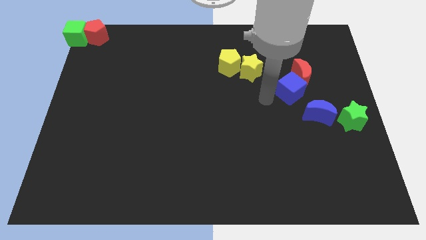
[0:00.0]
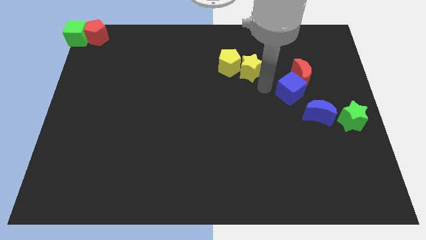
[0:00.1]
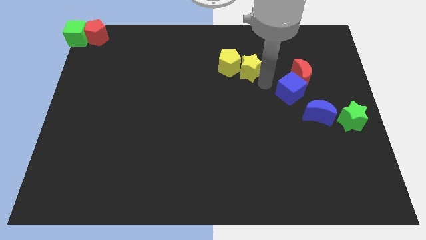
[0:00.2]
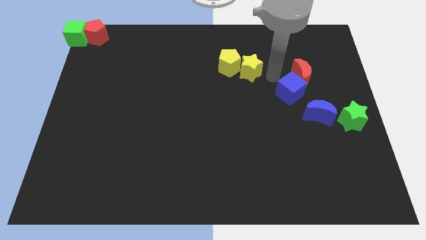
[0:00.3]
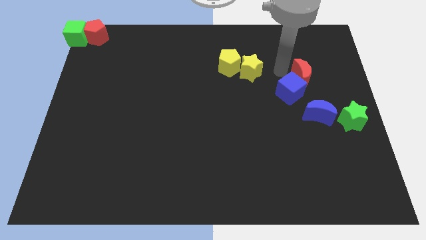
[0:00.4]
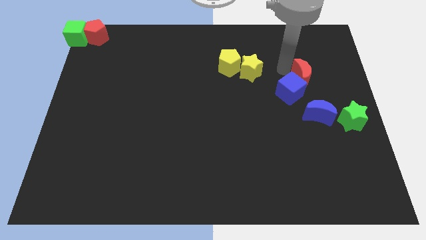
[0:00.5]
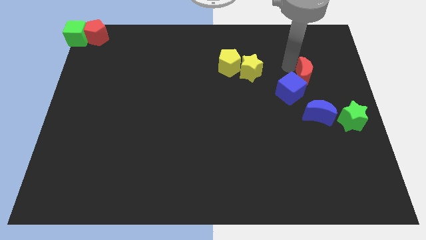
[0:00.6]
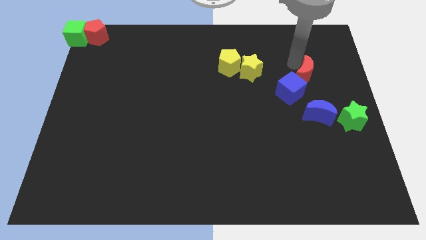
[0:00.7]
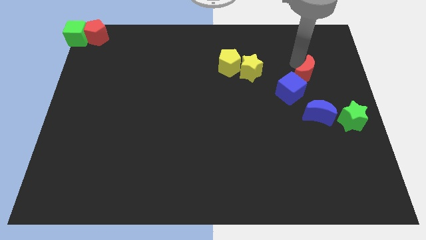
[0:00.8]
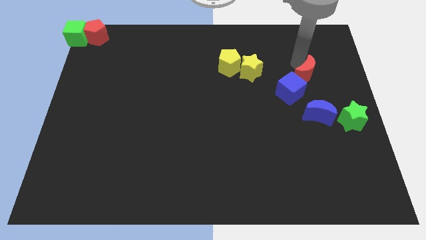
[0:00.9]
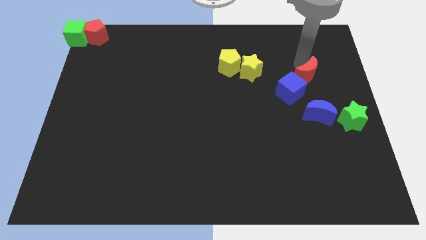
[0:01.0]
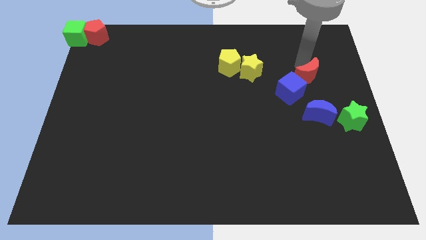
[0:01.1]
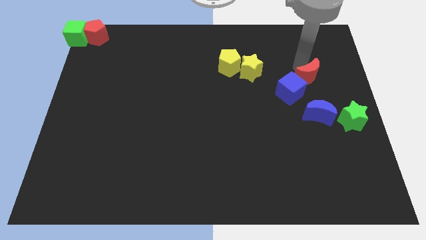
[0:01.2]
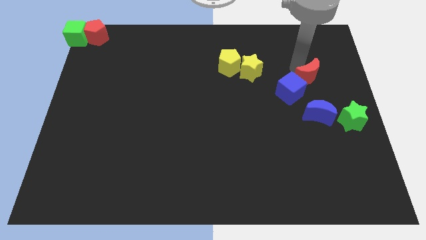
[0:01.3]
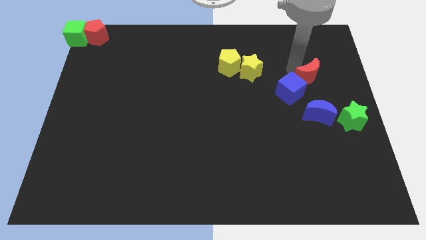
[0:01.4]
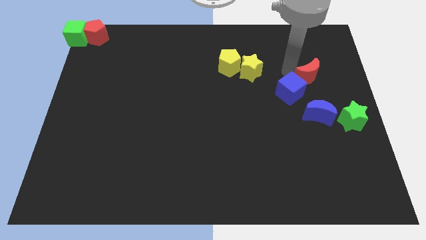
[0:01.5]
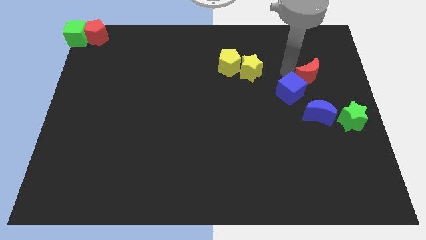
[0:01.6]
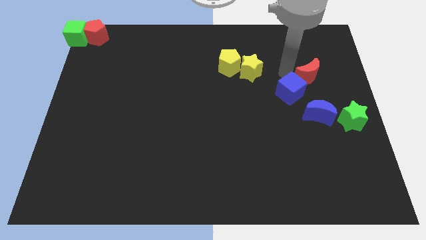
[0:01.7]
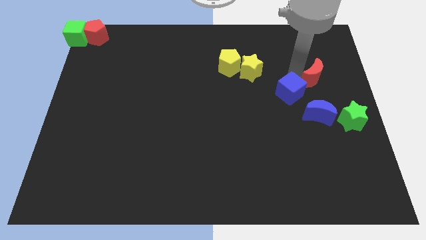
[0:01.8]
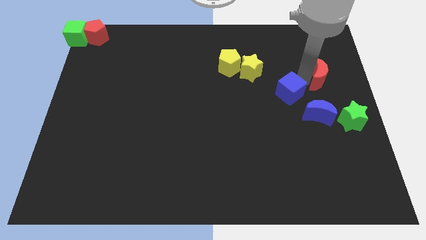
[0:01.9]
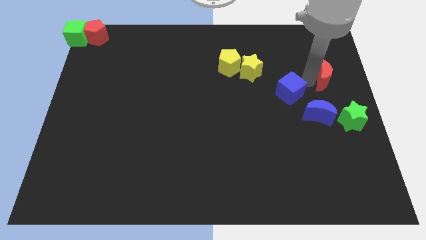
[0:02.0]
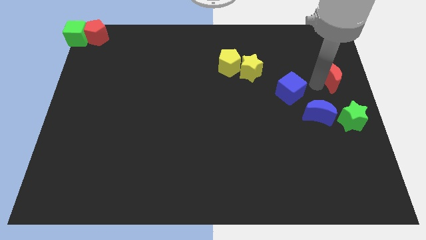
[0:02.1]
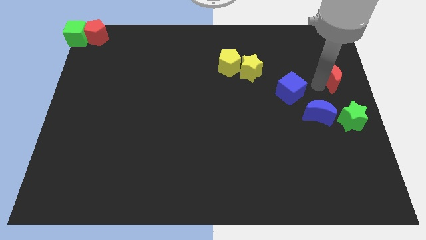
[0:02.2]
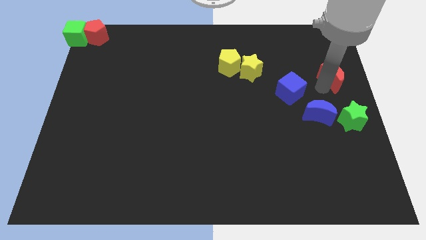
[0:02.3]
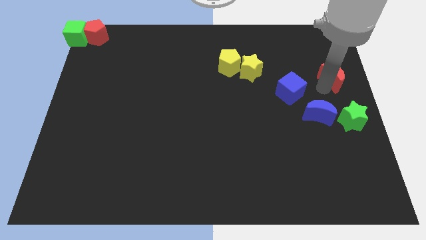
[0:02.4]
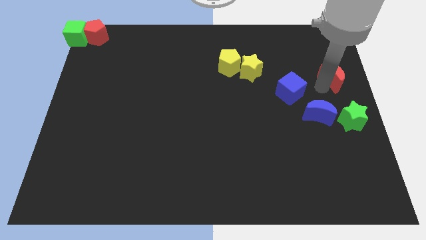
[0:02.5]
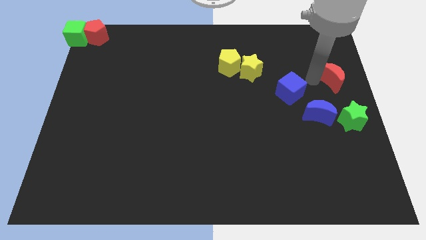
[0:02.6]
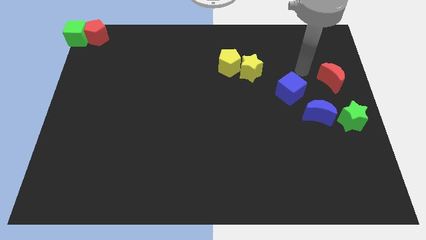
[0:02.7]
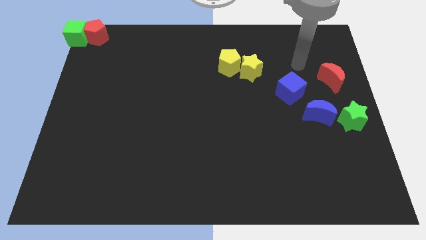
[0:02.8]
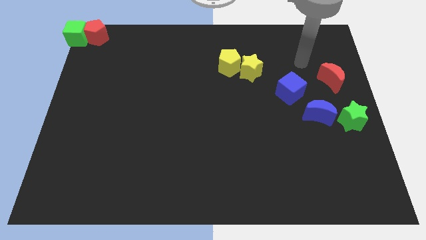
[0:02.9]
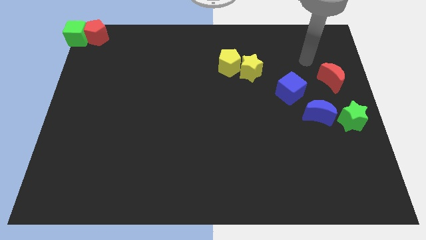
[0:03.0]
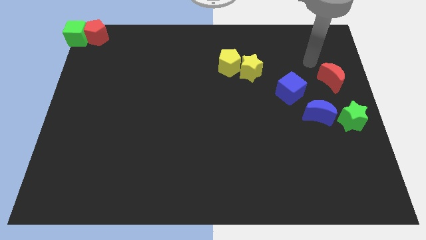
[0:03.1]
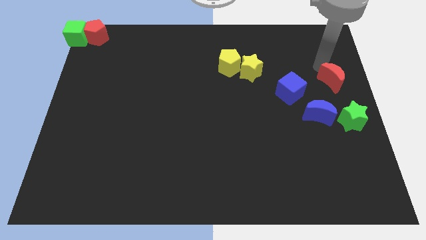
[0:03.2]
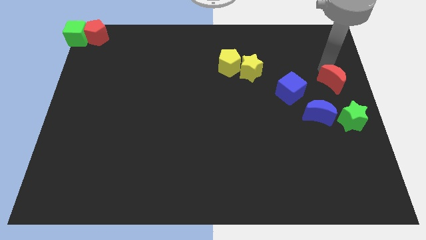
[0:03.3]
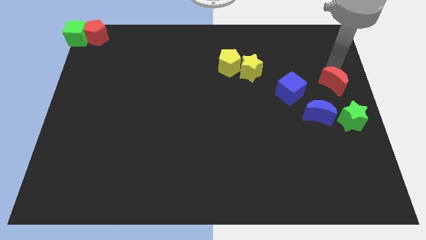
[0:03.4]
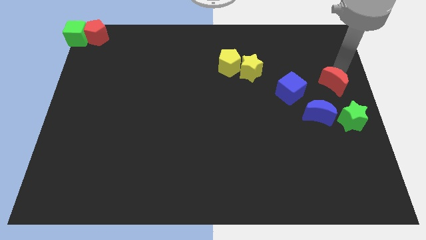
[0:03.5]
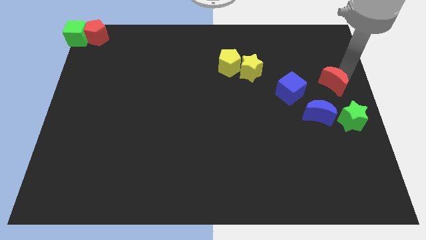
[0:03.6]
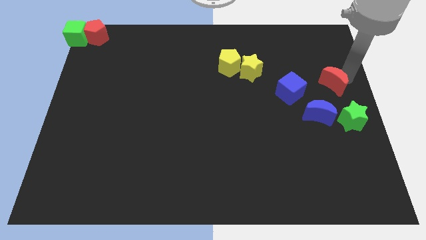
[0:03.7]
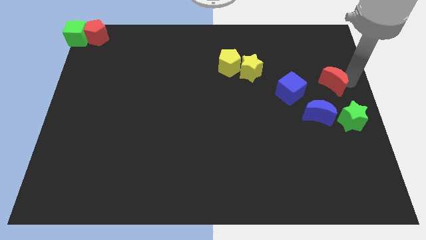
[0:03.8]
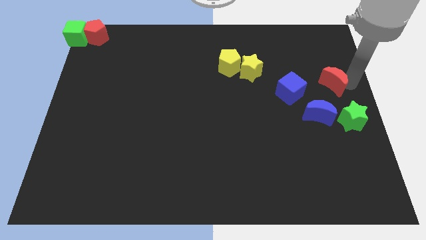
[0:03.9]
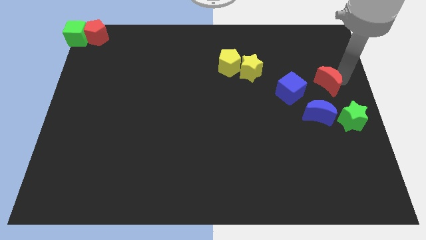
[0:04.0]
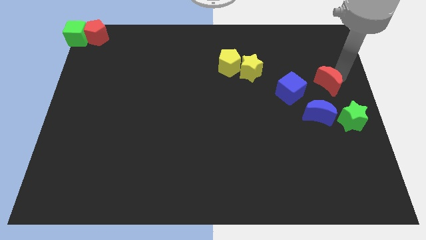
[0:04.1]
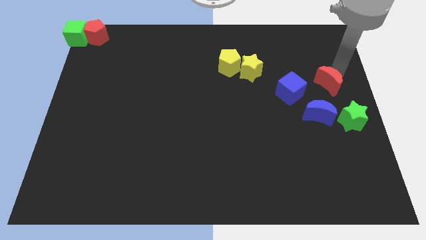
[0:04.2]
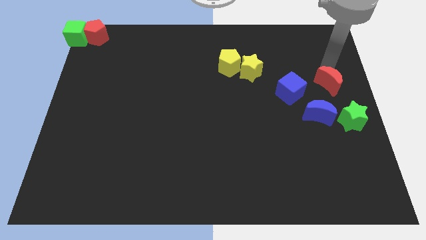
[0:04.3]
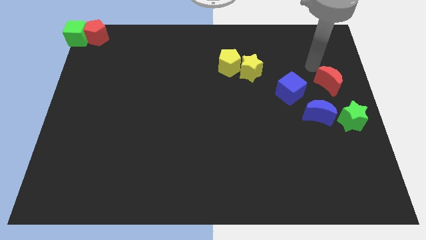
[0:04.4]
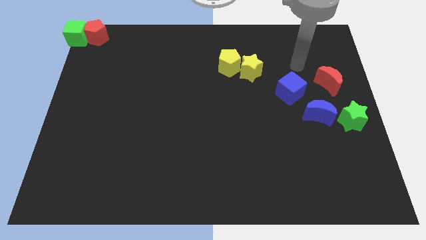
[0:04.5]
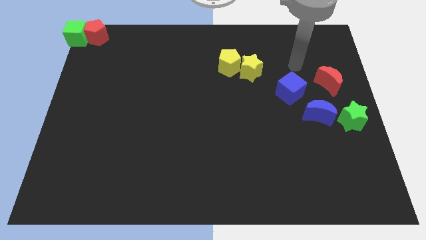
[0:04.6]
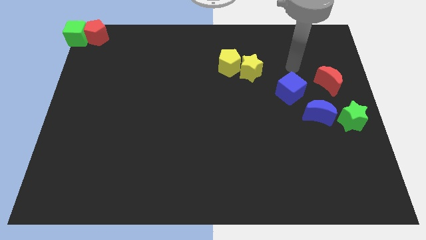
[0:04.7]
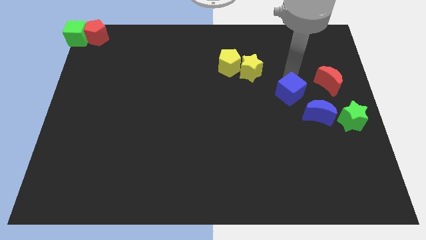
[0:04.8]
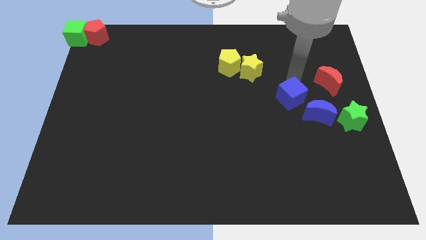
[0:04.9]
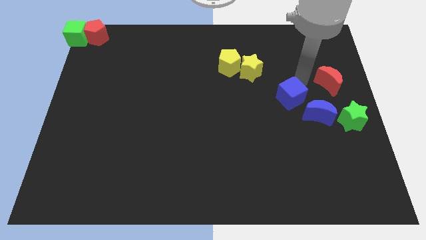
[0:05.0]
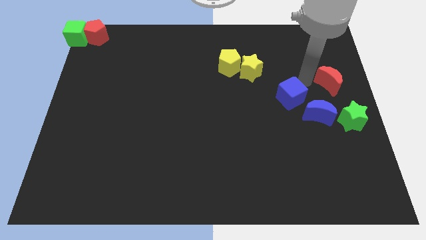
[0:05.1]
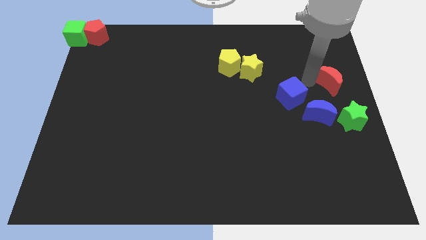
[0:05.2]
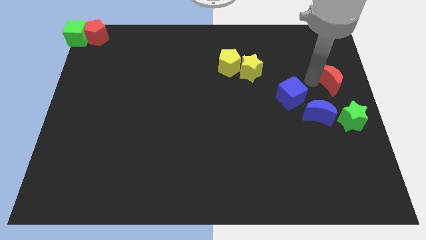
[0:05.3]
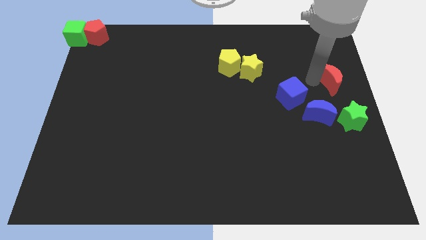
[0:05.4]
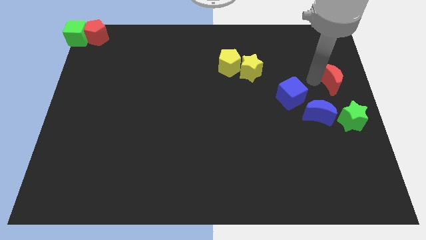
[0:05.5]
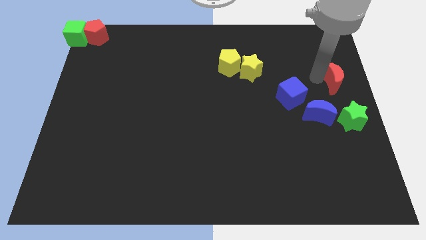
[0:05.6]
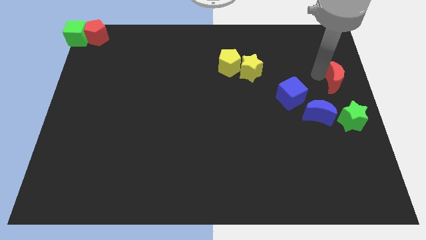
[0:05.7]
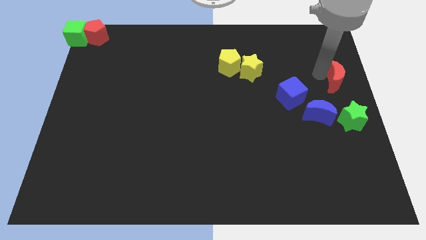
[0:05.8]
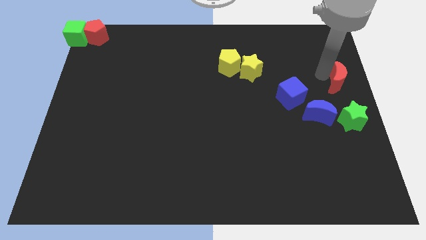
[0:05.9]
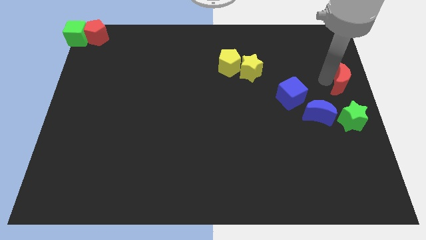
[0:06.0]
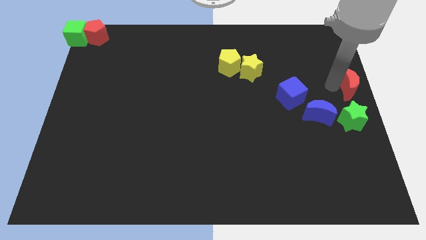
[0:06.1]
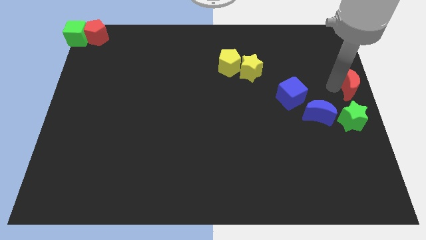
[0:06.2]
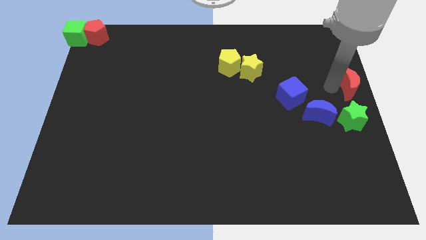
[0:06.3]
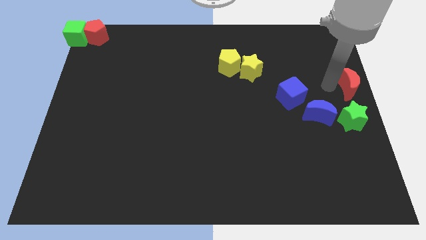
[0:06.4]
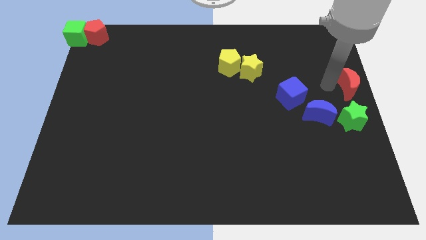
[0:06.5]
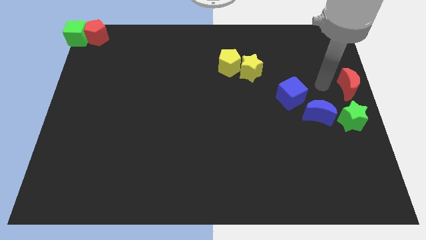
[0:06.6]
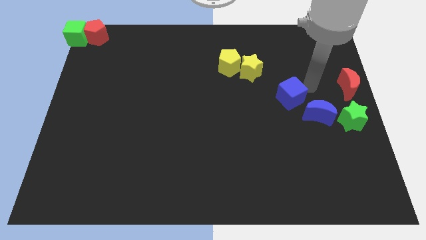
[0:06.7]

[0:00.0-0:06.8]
push red crescent vertically to the top of the green star

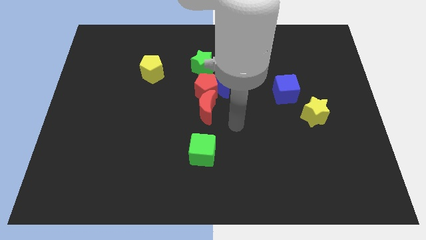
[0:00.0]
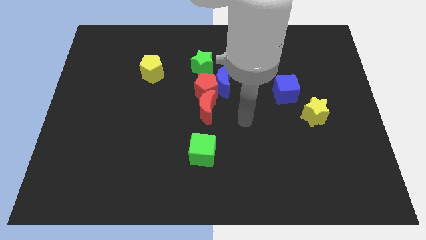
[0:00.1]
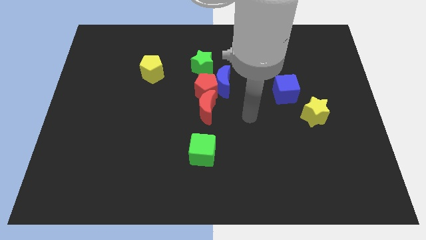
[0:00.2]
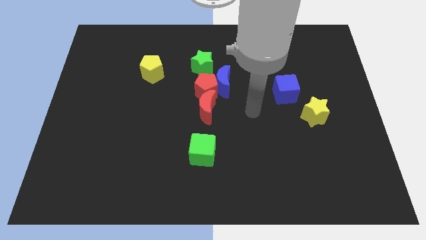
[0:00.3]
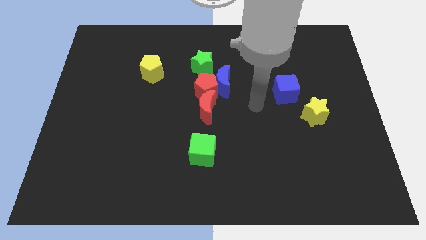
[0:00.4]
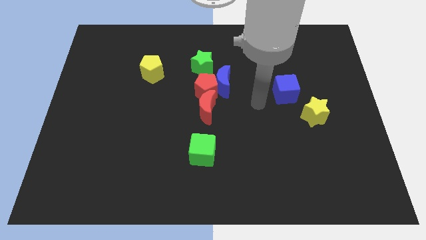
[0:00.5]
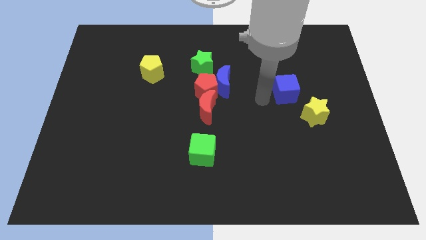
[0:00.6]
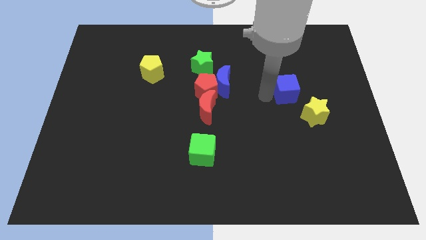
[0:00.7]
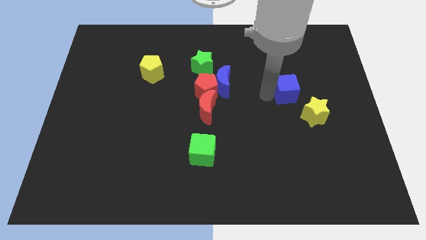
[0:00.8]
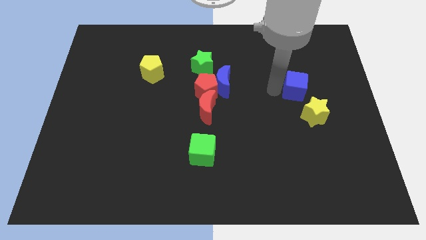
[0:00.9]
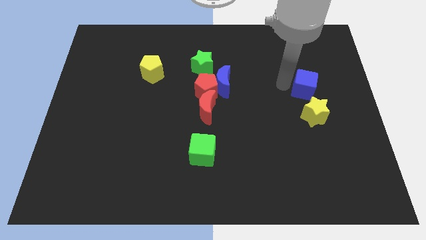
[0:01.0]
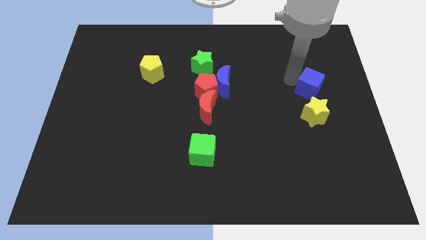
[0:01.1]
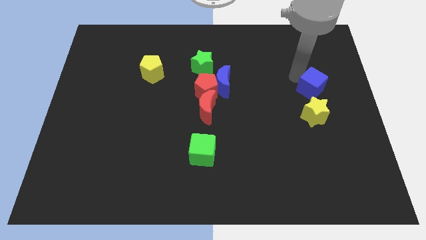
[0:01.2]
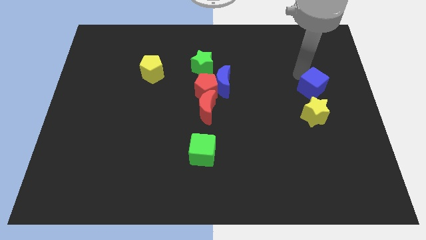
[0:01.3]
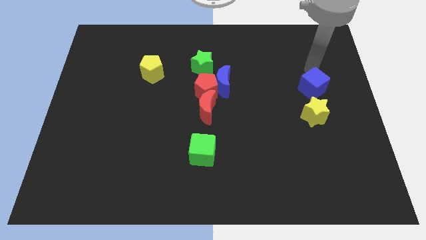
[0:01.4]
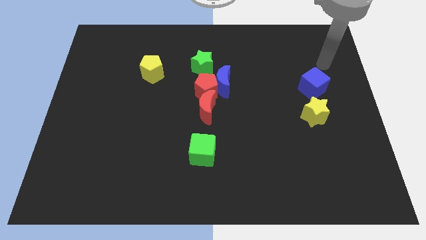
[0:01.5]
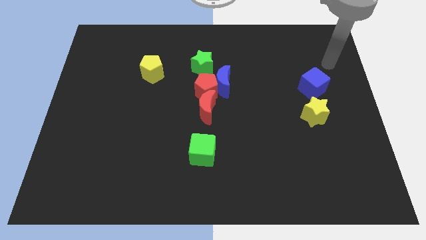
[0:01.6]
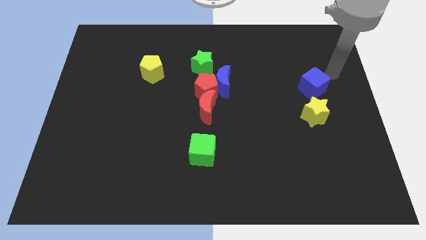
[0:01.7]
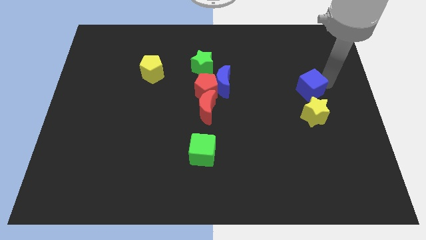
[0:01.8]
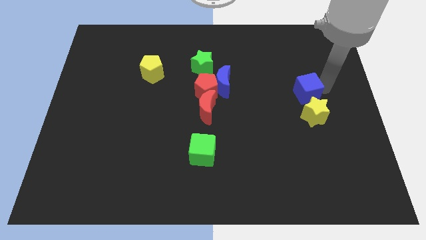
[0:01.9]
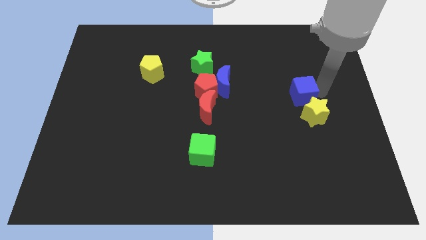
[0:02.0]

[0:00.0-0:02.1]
move the blue cube to the top left side of the yellow star
